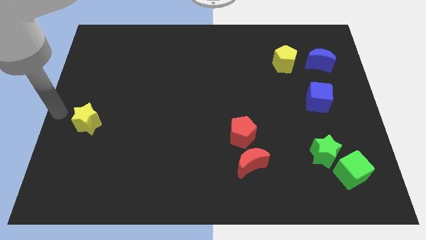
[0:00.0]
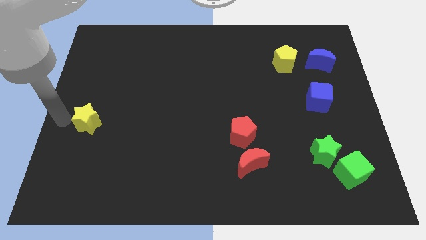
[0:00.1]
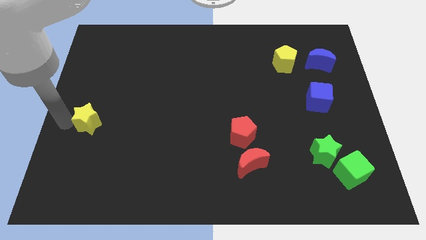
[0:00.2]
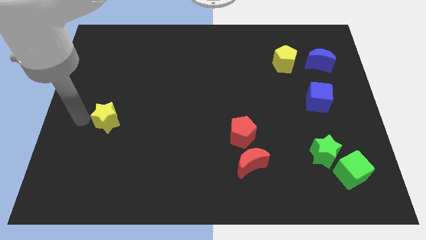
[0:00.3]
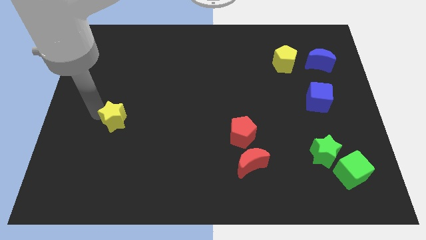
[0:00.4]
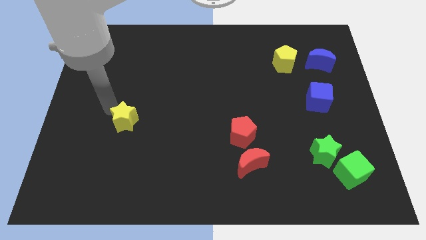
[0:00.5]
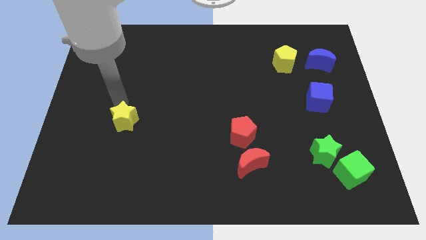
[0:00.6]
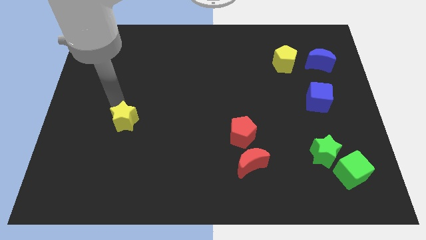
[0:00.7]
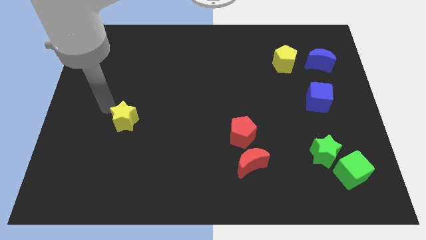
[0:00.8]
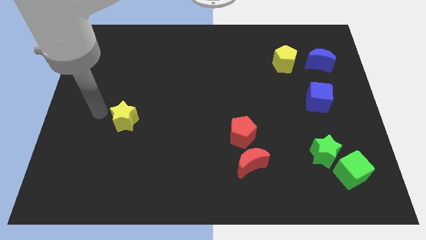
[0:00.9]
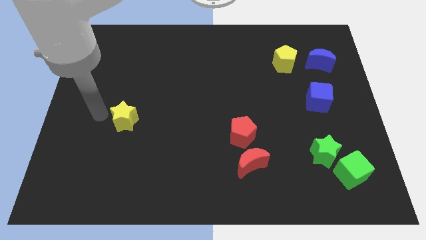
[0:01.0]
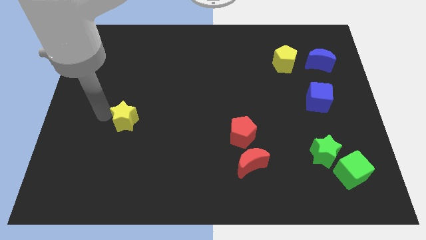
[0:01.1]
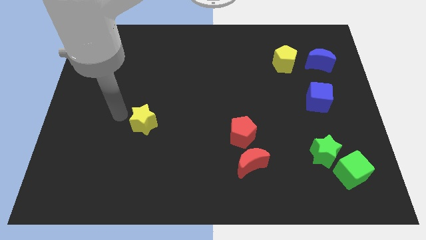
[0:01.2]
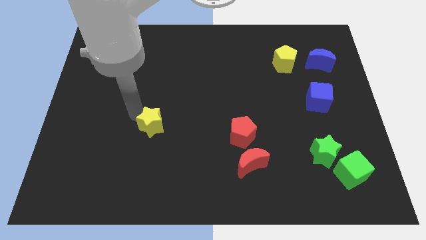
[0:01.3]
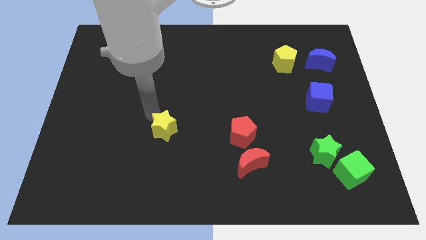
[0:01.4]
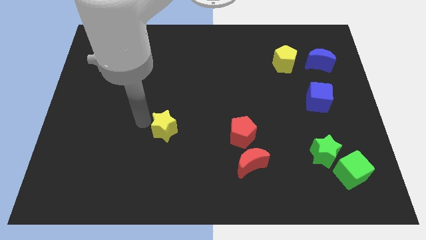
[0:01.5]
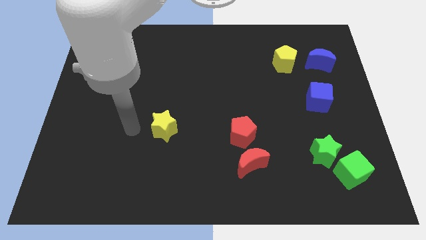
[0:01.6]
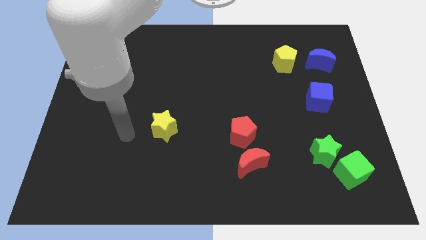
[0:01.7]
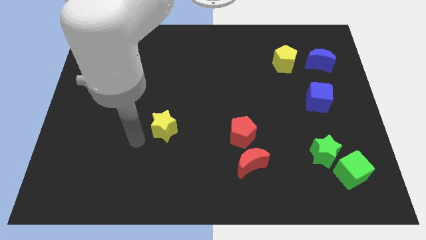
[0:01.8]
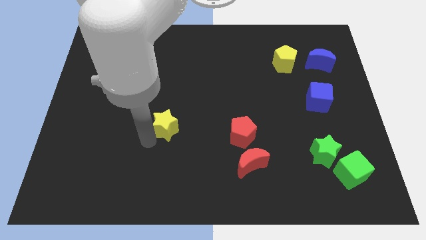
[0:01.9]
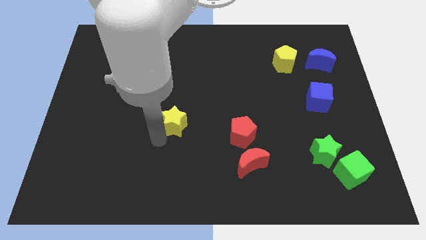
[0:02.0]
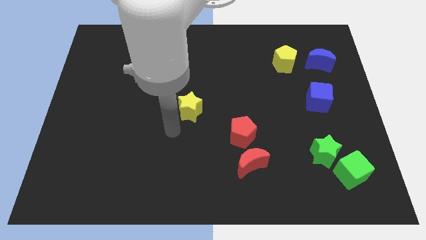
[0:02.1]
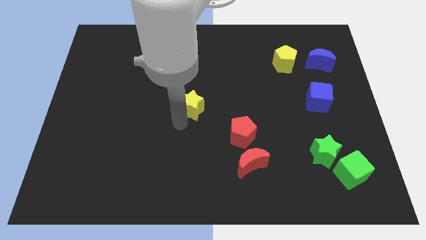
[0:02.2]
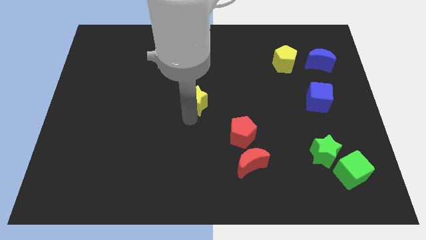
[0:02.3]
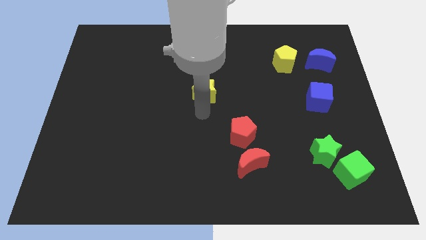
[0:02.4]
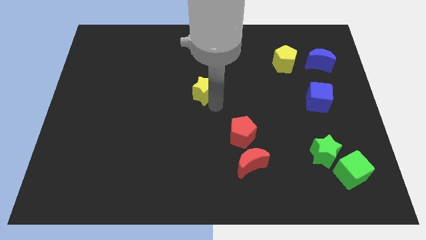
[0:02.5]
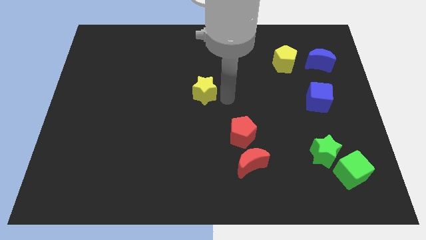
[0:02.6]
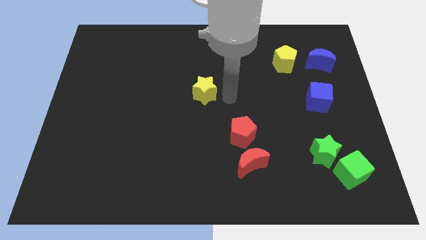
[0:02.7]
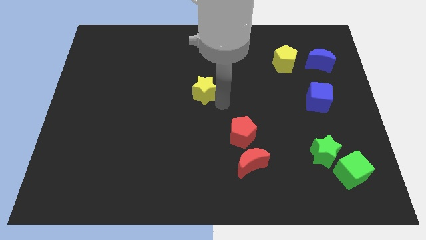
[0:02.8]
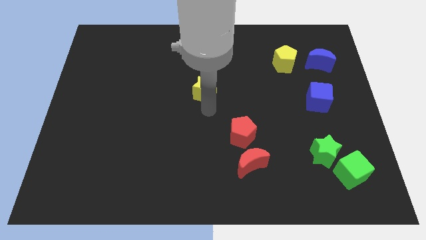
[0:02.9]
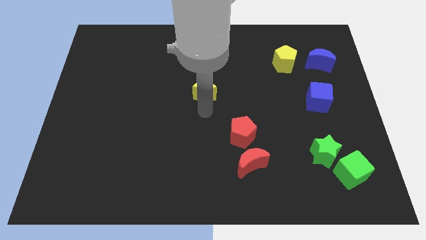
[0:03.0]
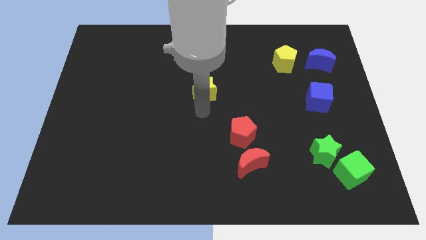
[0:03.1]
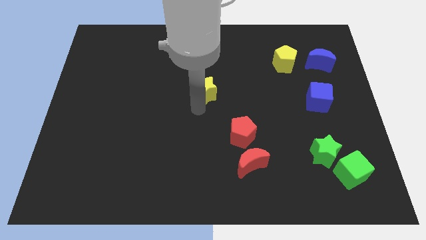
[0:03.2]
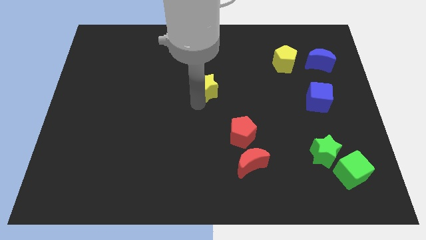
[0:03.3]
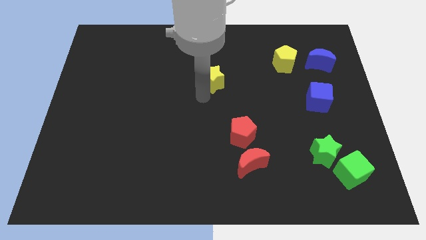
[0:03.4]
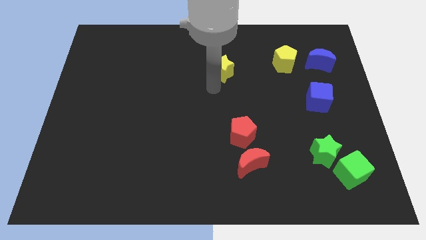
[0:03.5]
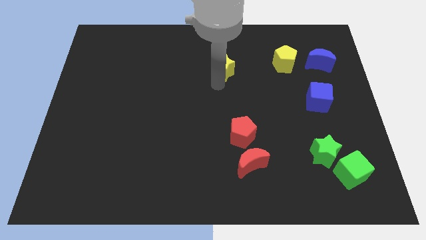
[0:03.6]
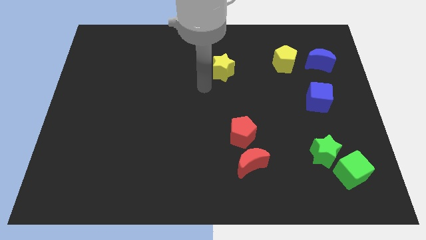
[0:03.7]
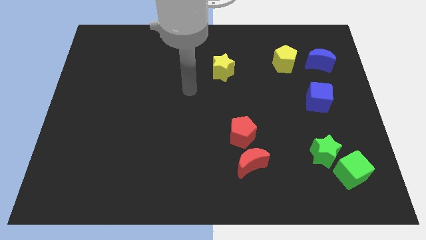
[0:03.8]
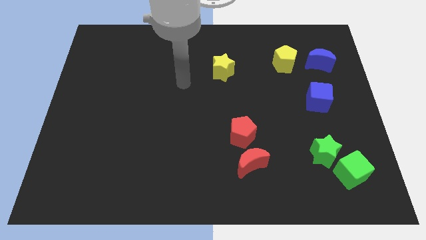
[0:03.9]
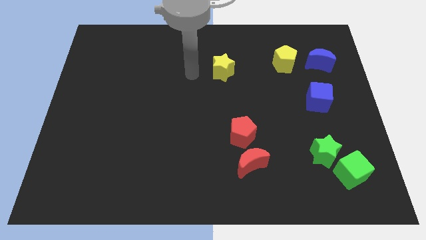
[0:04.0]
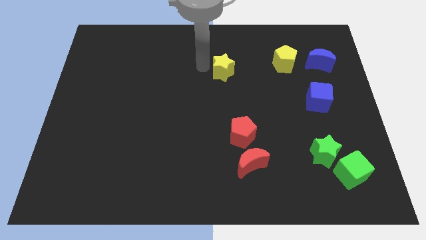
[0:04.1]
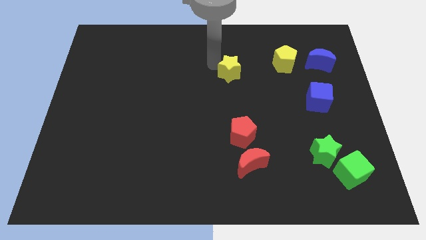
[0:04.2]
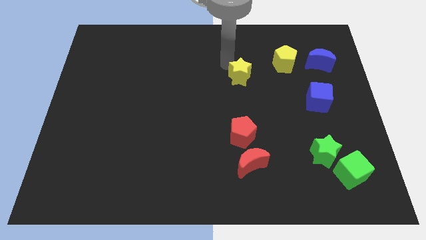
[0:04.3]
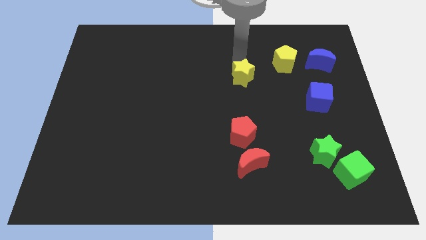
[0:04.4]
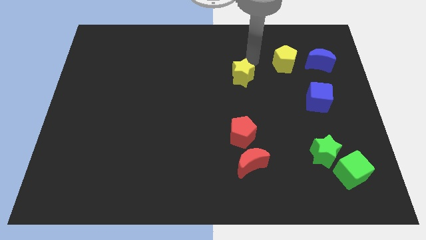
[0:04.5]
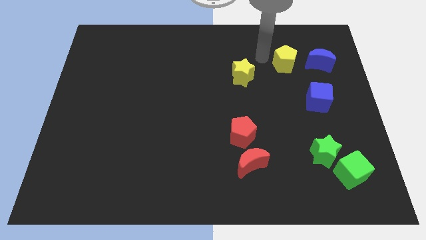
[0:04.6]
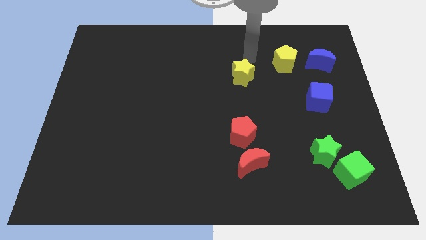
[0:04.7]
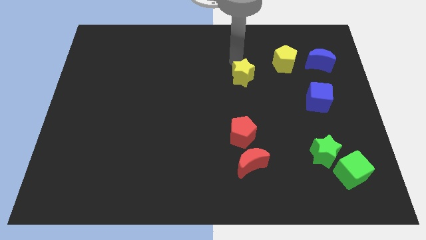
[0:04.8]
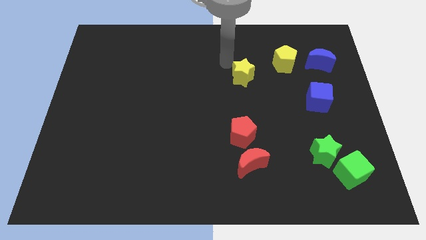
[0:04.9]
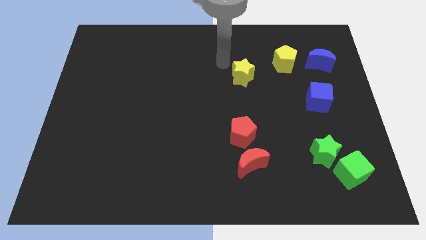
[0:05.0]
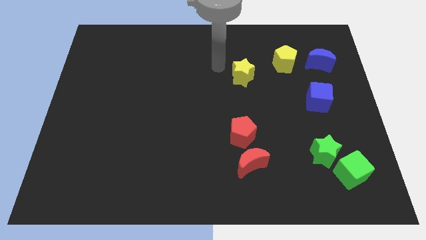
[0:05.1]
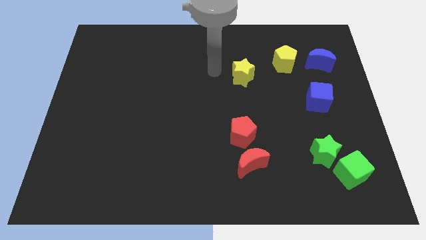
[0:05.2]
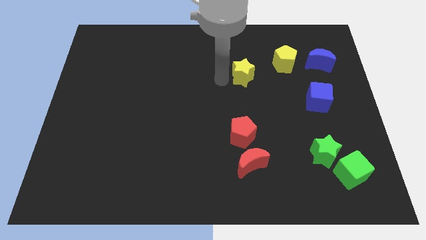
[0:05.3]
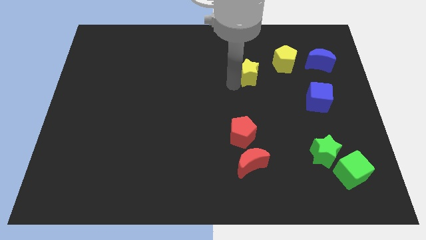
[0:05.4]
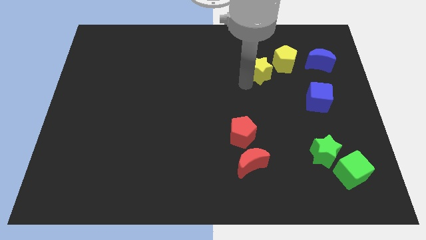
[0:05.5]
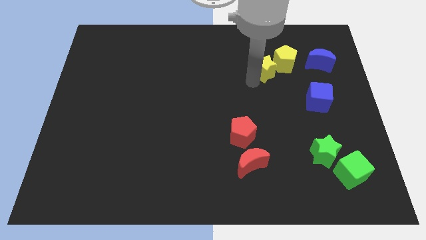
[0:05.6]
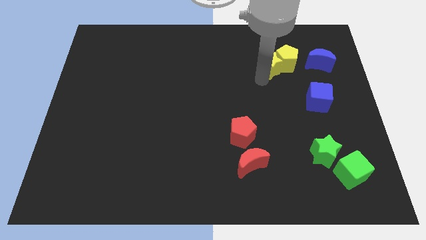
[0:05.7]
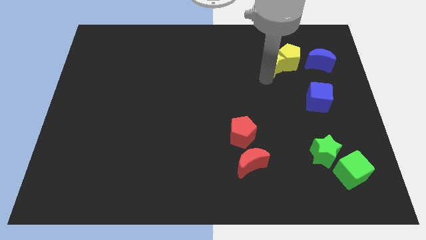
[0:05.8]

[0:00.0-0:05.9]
push the yellow star left to the yellow pentagon

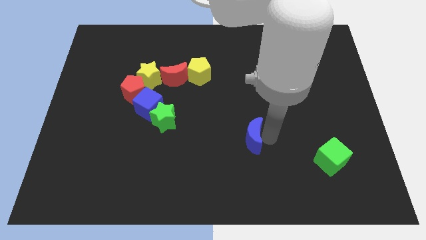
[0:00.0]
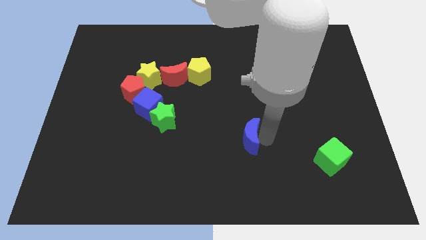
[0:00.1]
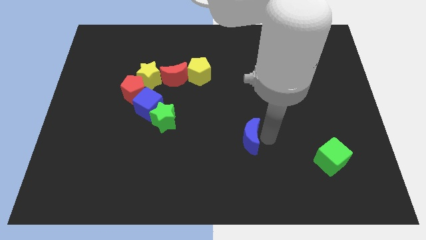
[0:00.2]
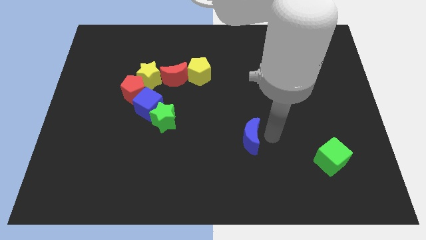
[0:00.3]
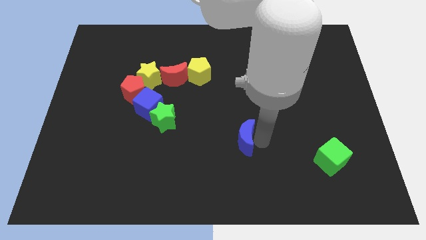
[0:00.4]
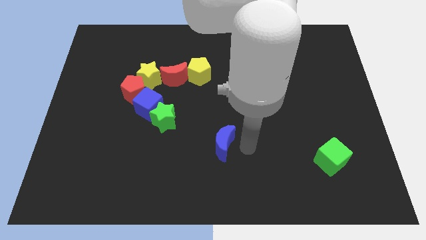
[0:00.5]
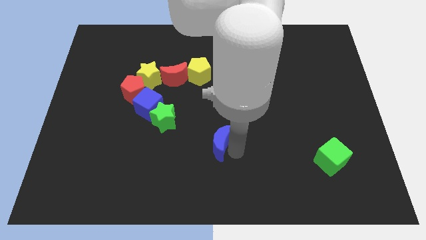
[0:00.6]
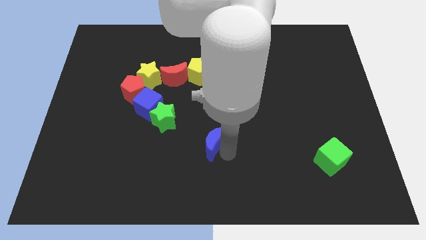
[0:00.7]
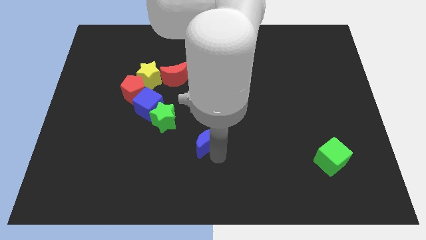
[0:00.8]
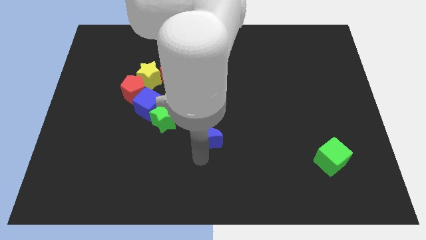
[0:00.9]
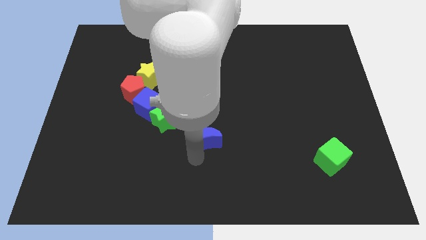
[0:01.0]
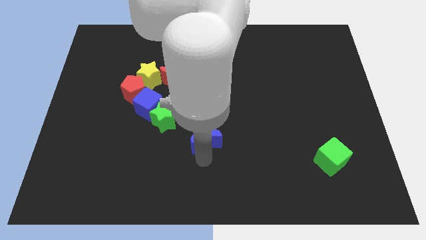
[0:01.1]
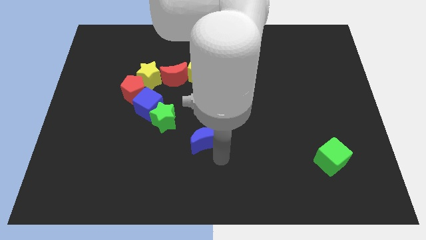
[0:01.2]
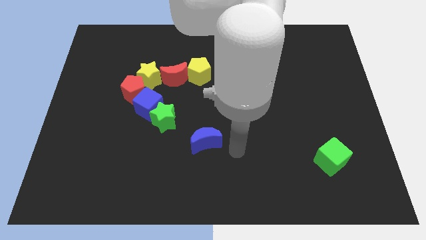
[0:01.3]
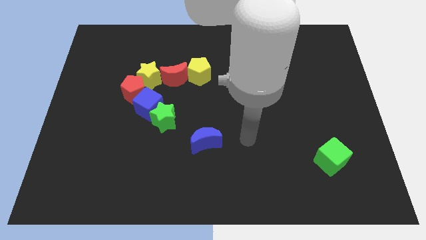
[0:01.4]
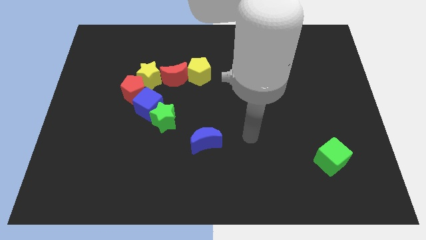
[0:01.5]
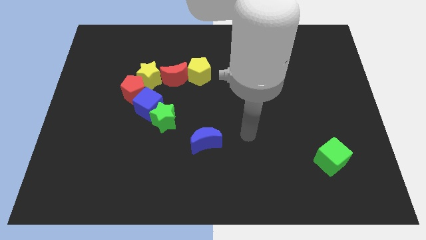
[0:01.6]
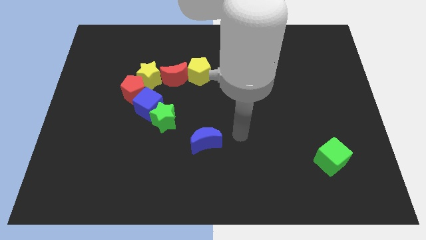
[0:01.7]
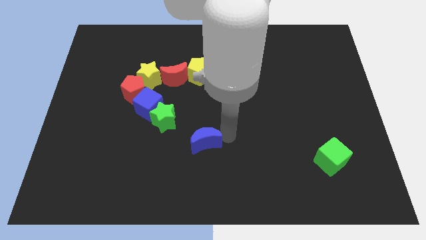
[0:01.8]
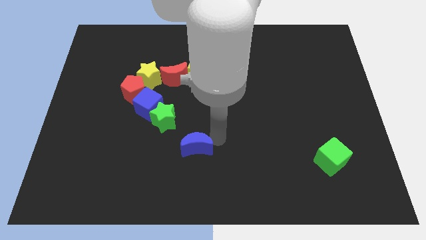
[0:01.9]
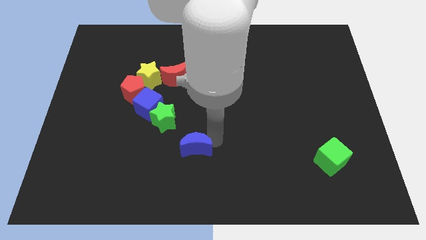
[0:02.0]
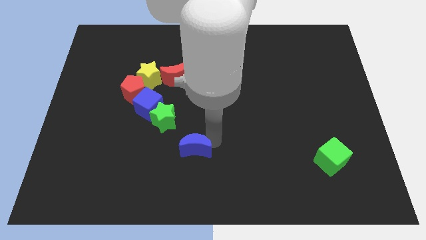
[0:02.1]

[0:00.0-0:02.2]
move the blue crescent towards green star

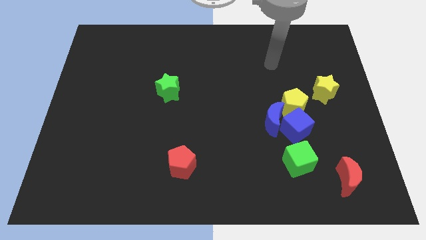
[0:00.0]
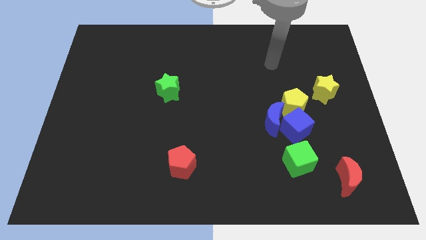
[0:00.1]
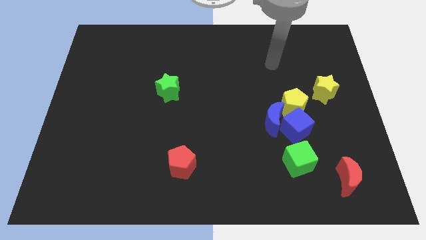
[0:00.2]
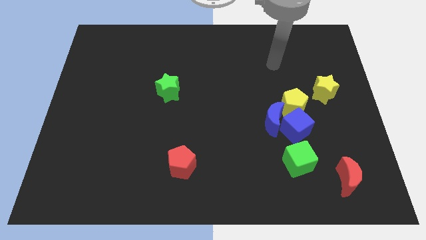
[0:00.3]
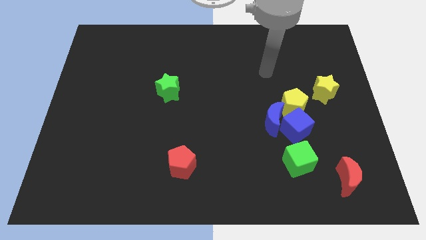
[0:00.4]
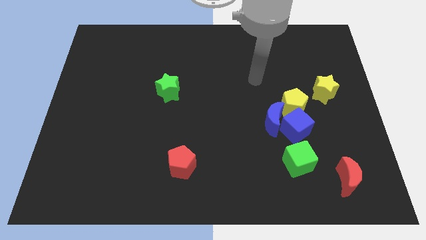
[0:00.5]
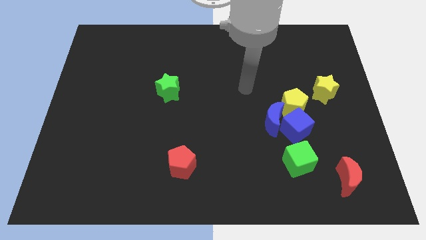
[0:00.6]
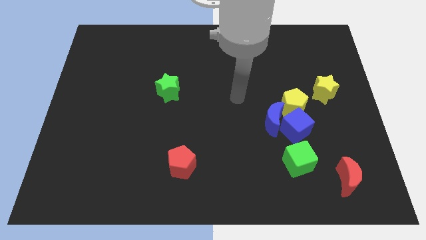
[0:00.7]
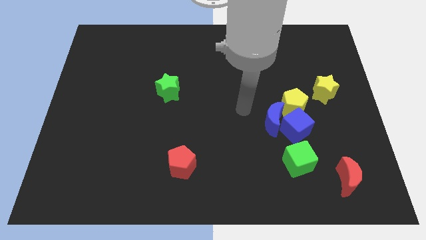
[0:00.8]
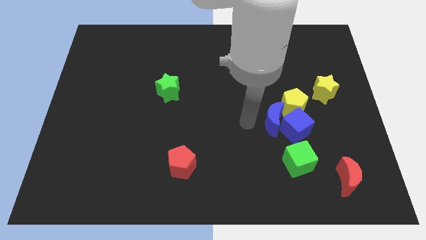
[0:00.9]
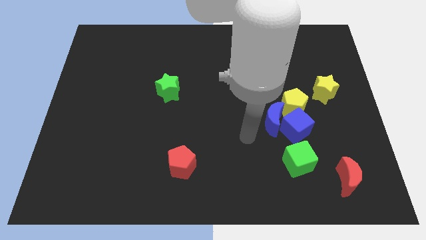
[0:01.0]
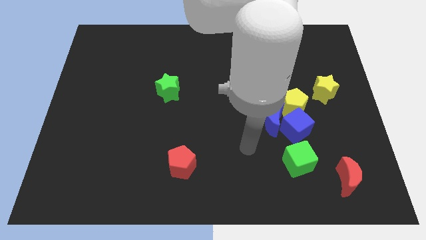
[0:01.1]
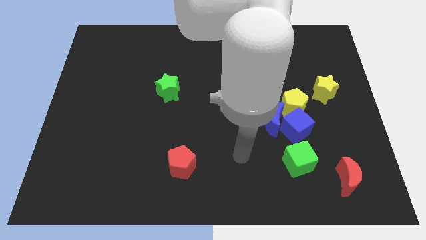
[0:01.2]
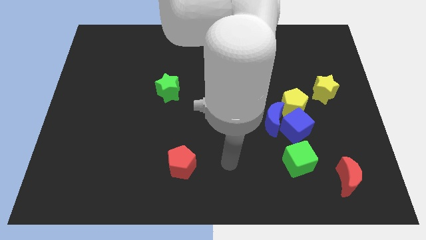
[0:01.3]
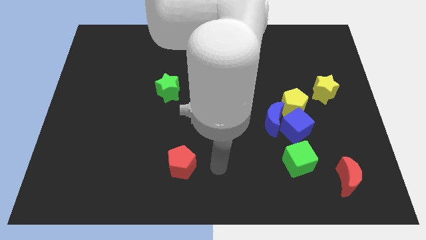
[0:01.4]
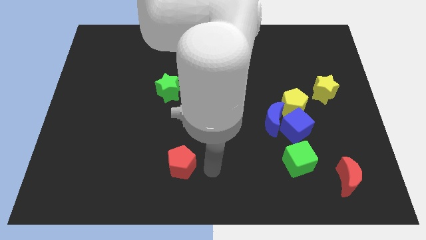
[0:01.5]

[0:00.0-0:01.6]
point your arm at the right of the red pentagon
